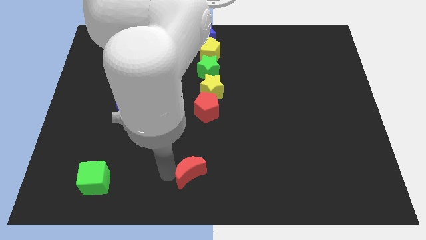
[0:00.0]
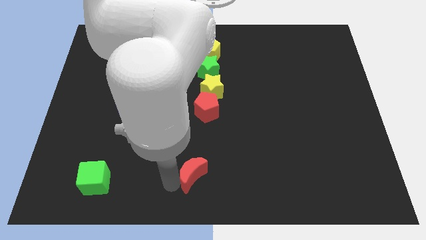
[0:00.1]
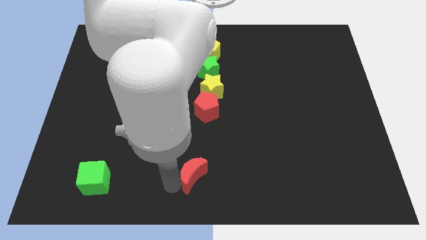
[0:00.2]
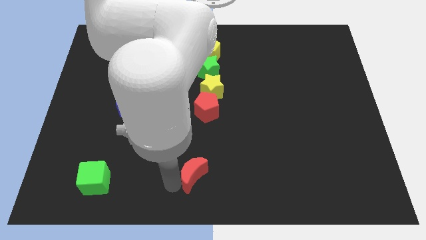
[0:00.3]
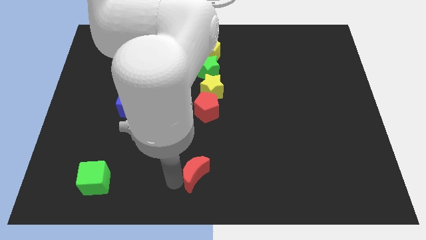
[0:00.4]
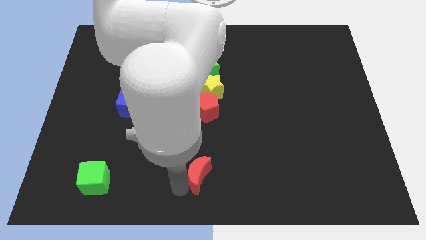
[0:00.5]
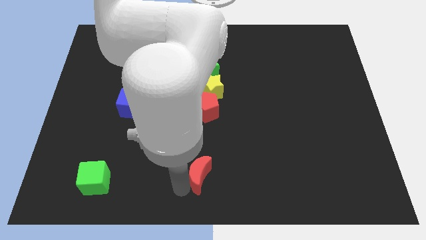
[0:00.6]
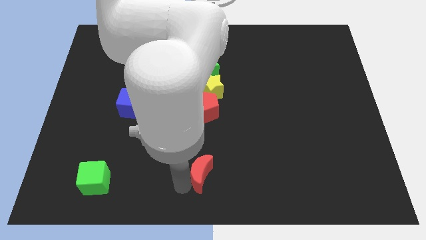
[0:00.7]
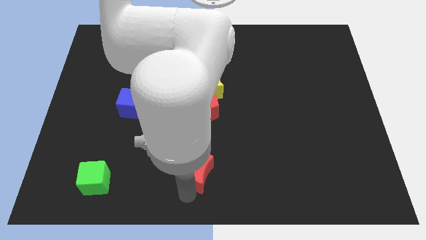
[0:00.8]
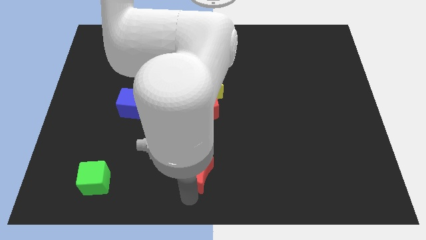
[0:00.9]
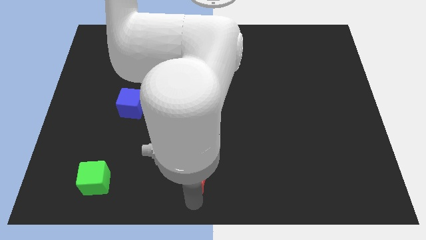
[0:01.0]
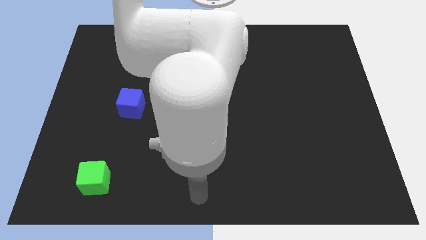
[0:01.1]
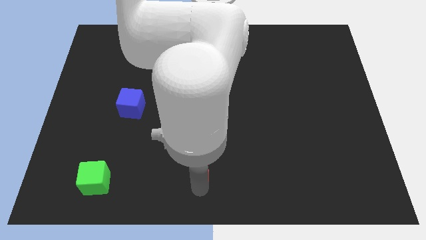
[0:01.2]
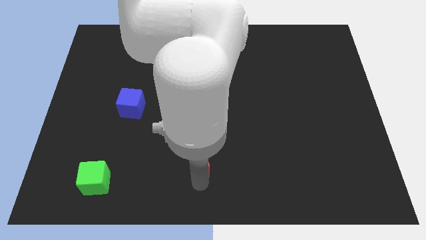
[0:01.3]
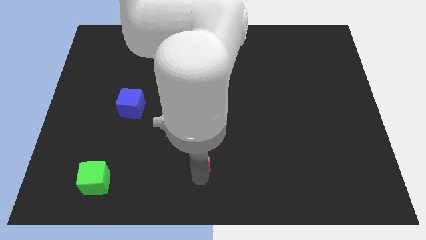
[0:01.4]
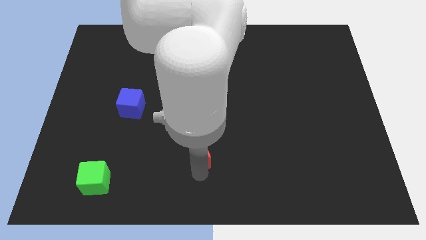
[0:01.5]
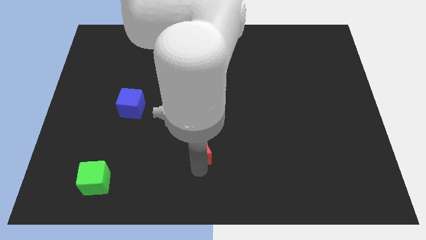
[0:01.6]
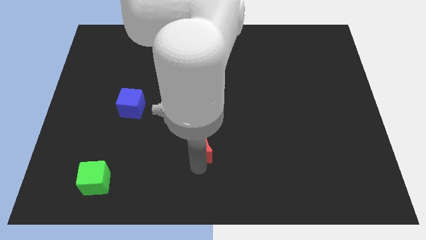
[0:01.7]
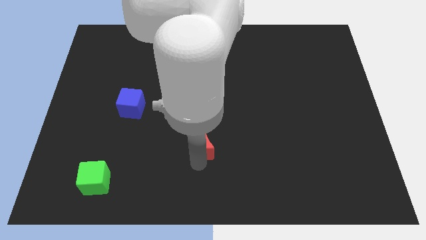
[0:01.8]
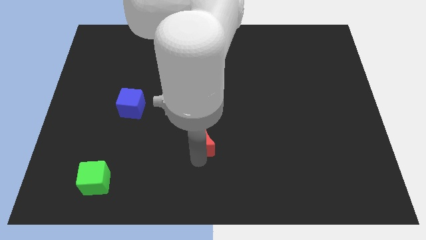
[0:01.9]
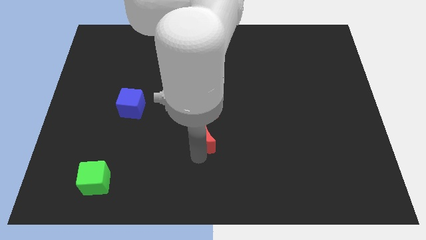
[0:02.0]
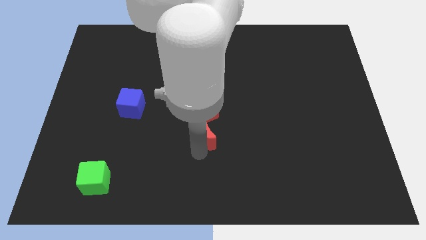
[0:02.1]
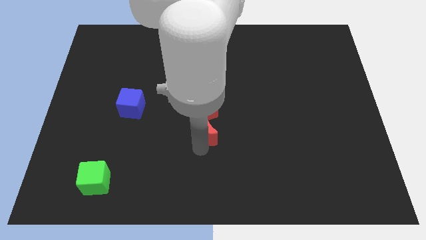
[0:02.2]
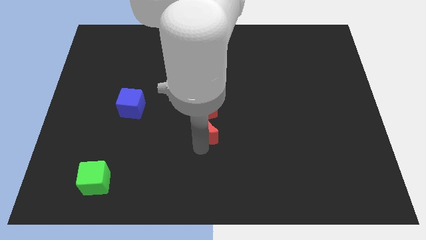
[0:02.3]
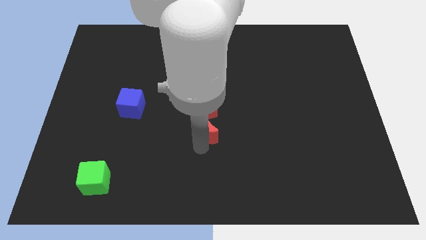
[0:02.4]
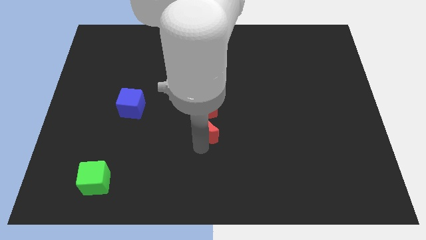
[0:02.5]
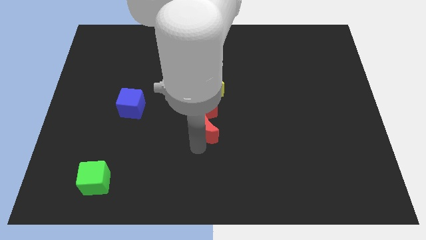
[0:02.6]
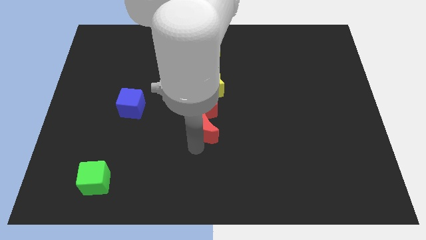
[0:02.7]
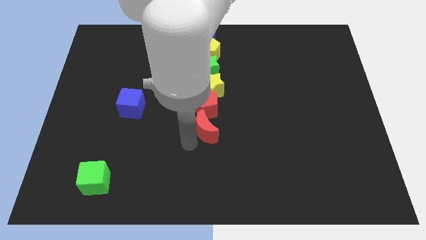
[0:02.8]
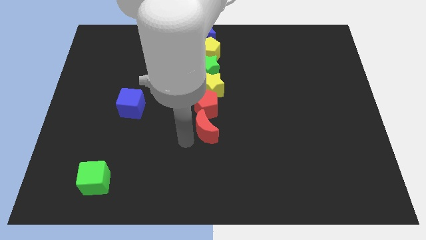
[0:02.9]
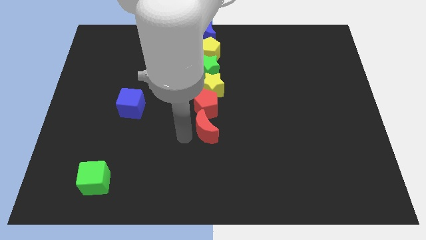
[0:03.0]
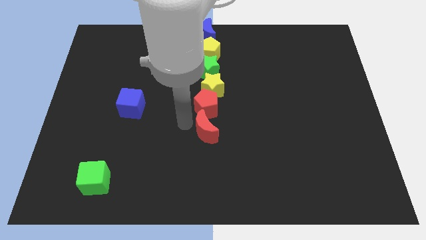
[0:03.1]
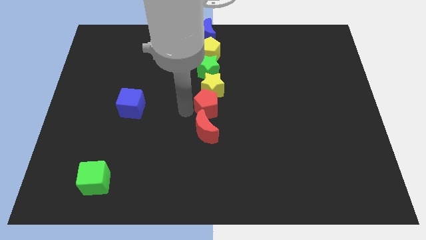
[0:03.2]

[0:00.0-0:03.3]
drag the red crescent into the red pentagon

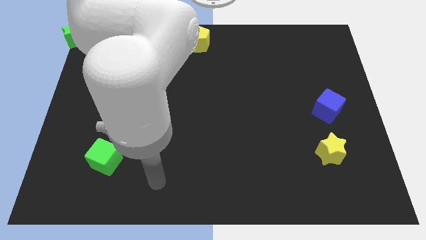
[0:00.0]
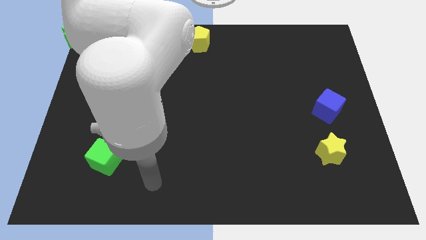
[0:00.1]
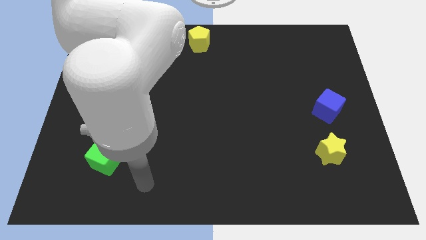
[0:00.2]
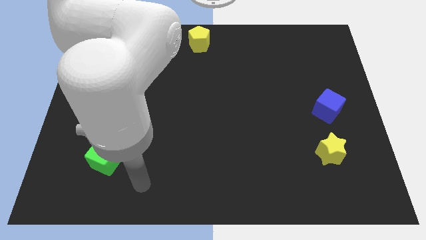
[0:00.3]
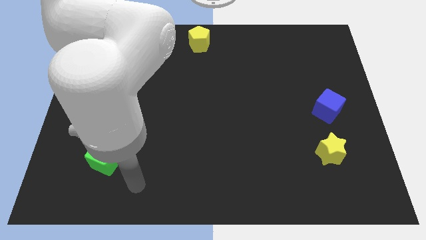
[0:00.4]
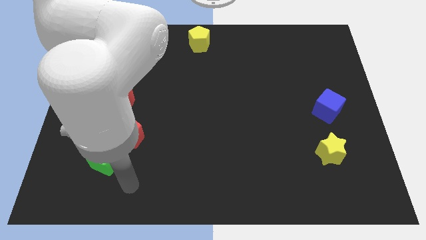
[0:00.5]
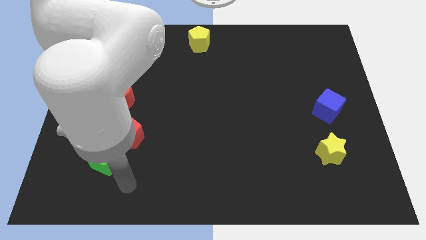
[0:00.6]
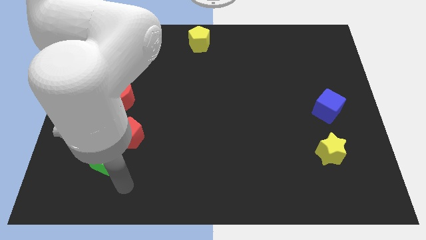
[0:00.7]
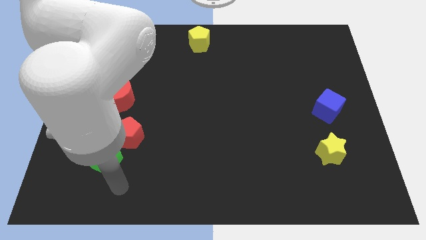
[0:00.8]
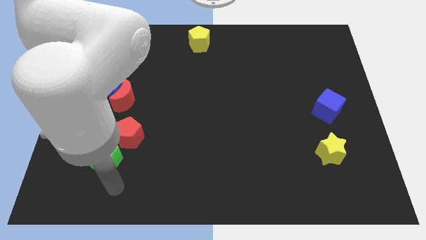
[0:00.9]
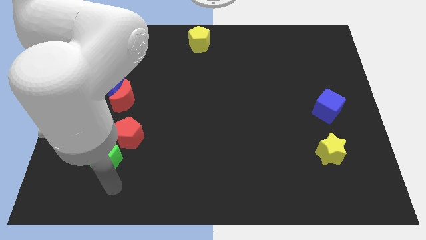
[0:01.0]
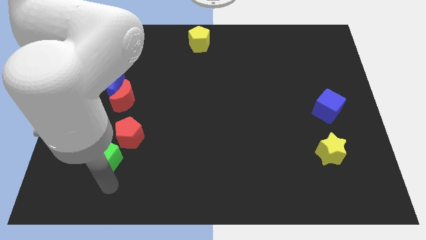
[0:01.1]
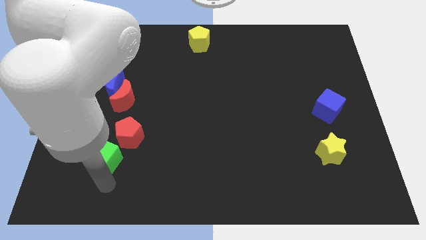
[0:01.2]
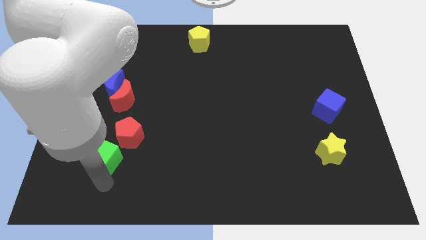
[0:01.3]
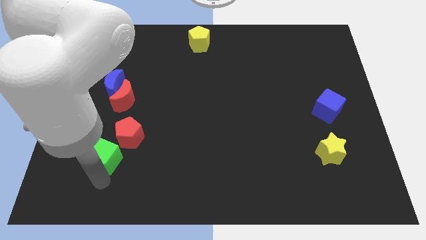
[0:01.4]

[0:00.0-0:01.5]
place arm at the bottom of the green cube

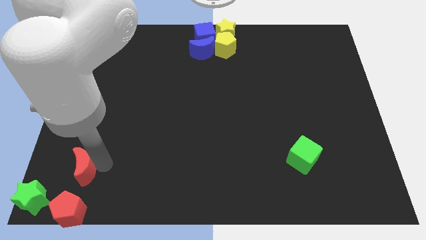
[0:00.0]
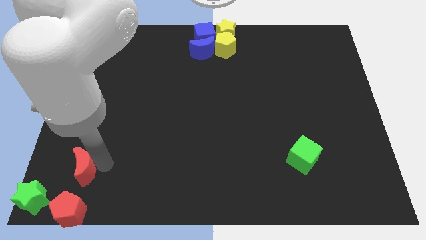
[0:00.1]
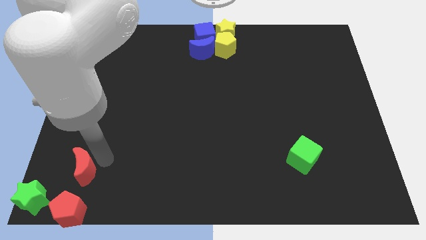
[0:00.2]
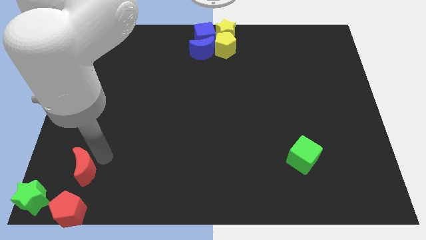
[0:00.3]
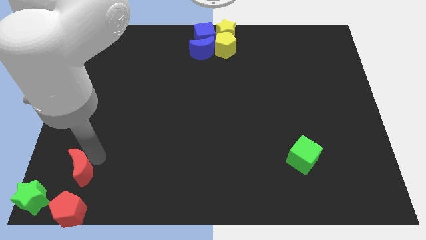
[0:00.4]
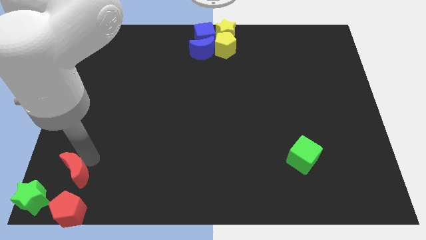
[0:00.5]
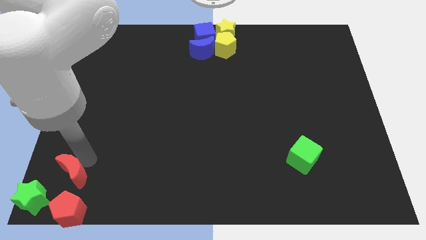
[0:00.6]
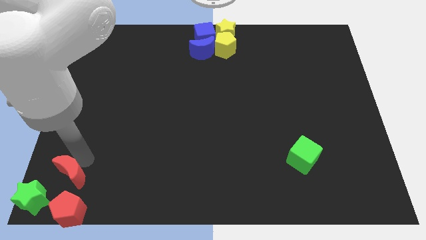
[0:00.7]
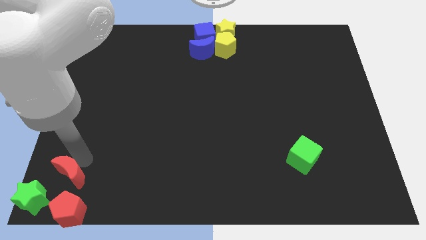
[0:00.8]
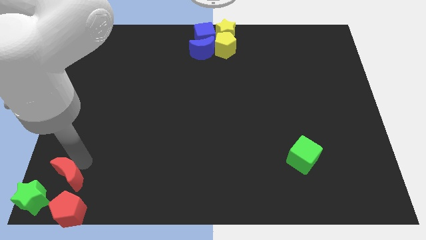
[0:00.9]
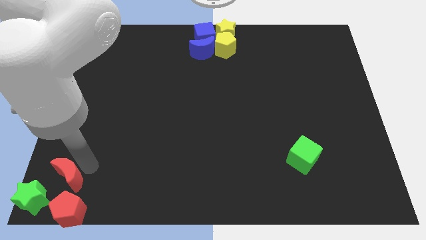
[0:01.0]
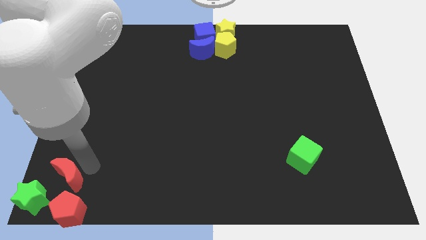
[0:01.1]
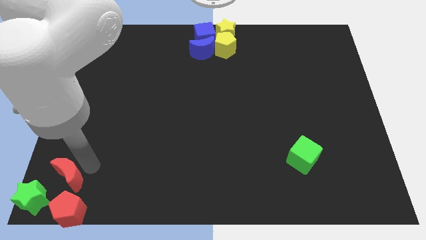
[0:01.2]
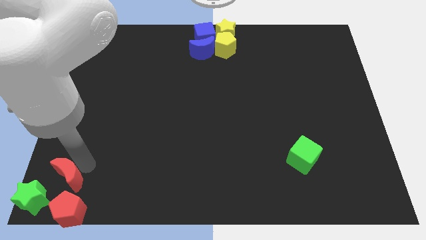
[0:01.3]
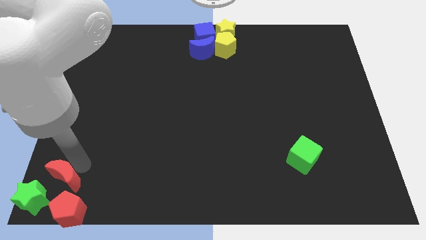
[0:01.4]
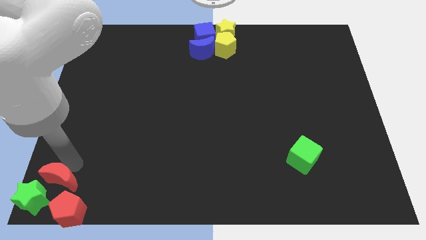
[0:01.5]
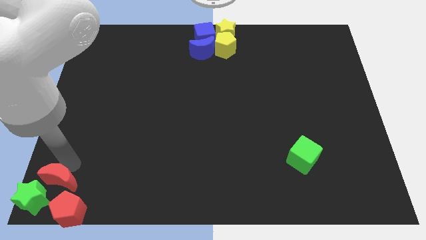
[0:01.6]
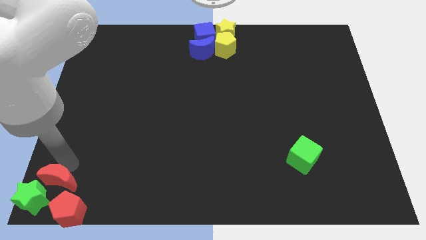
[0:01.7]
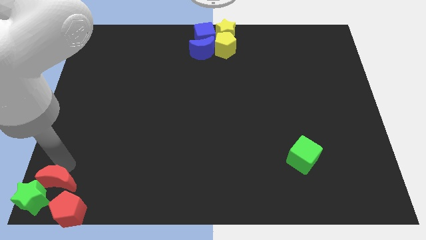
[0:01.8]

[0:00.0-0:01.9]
place the red crescent above of both the green star and the red pentagon

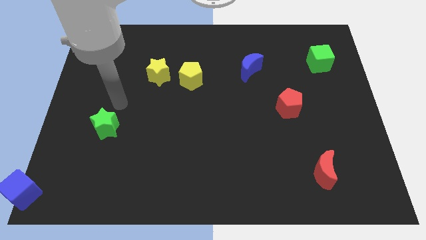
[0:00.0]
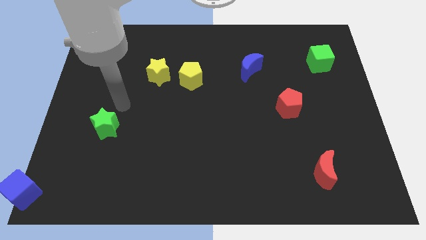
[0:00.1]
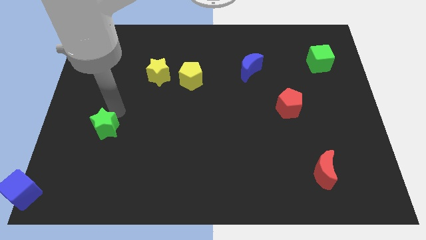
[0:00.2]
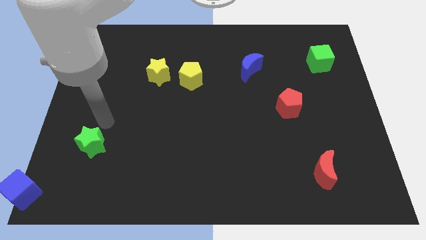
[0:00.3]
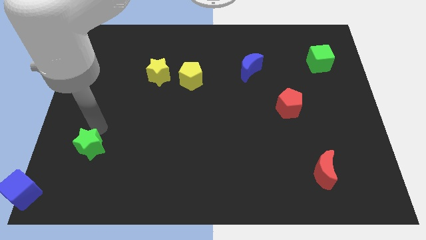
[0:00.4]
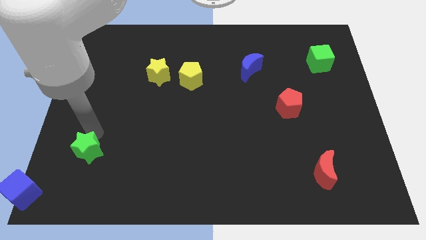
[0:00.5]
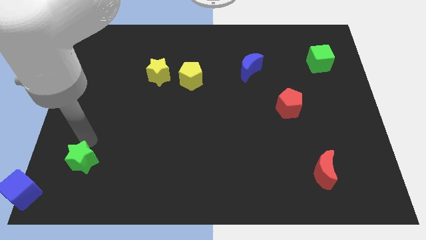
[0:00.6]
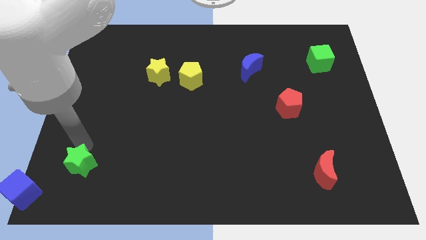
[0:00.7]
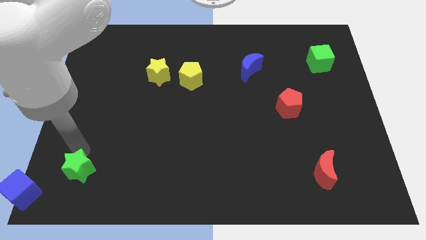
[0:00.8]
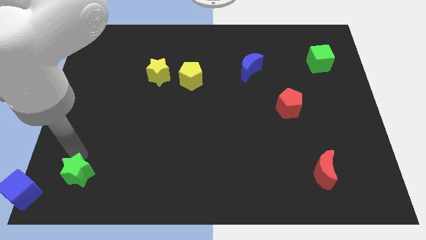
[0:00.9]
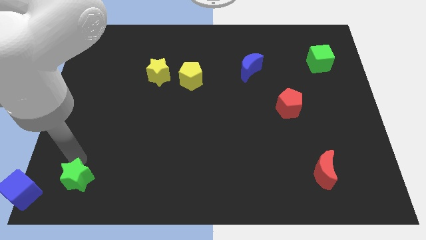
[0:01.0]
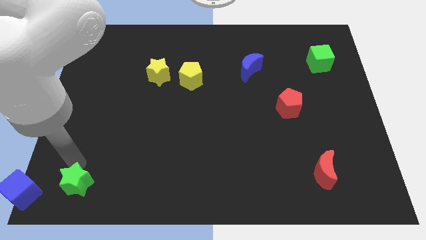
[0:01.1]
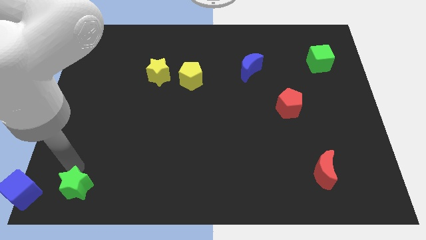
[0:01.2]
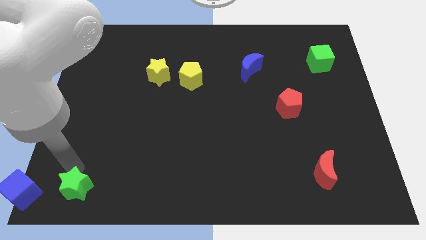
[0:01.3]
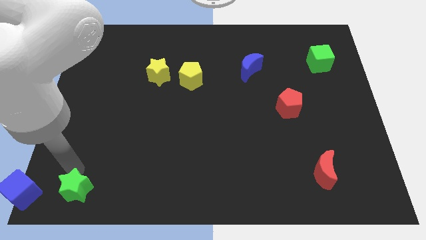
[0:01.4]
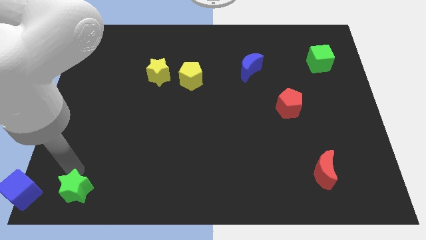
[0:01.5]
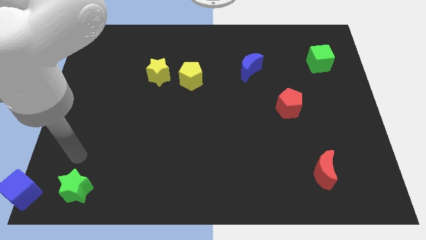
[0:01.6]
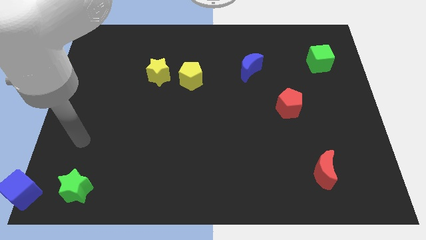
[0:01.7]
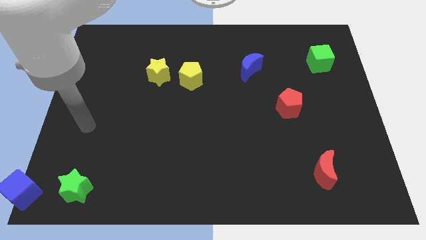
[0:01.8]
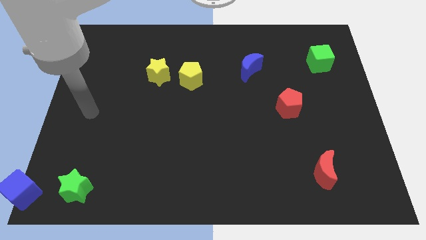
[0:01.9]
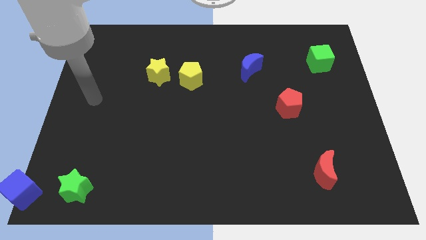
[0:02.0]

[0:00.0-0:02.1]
push green star to the right of blue cube

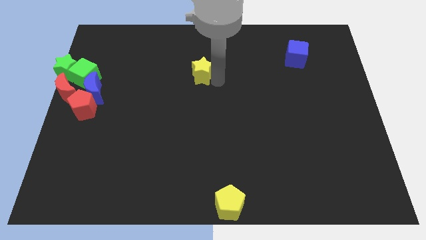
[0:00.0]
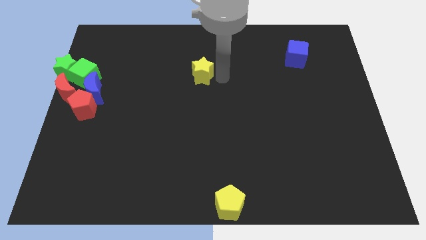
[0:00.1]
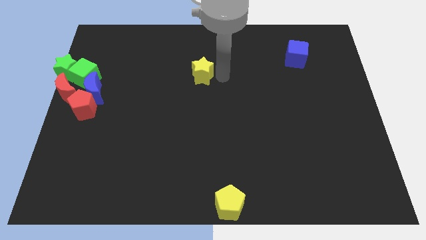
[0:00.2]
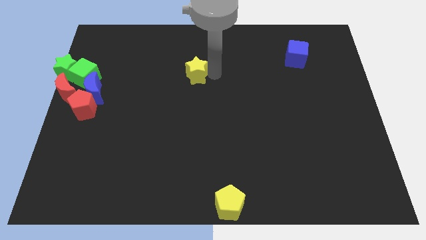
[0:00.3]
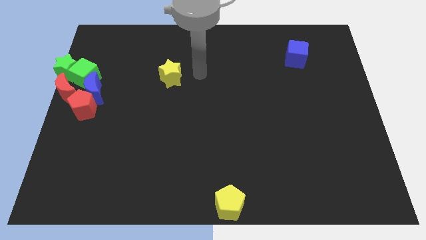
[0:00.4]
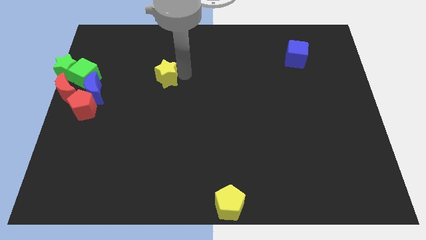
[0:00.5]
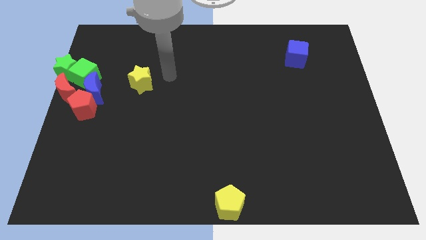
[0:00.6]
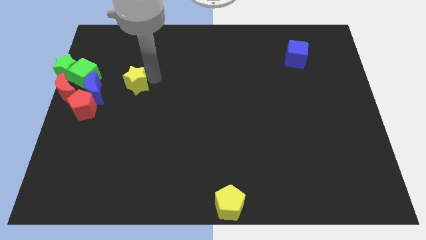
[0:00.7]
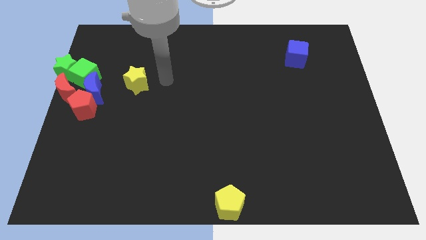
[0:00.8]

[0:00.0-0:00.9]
drag the yellow star to the left
